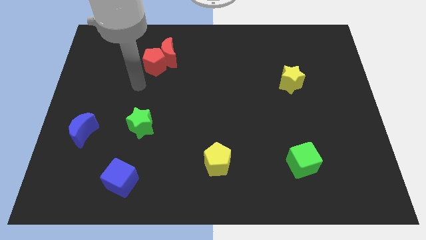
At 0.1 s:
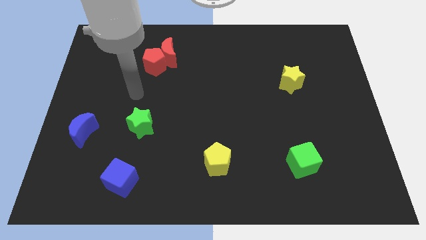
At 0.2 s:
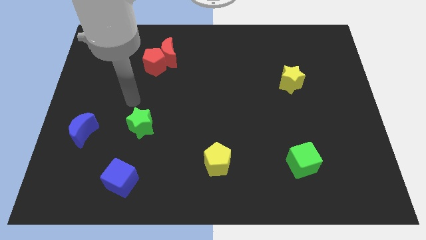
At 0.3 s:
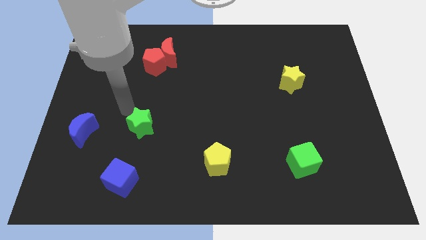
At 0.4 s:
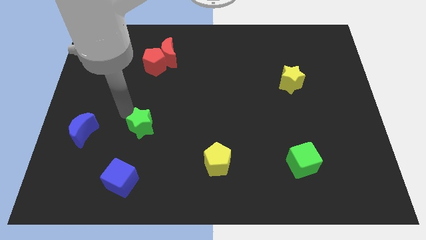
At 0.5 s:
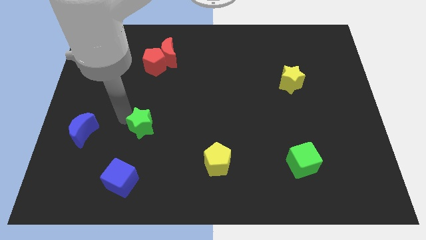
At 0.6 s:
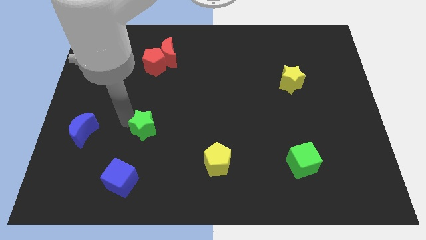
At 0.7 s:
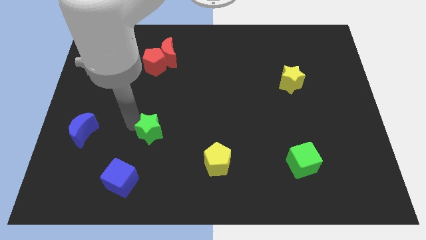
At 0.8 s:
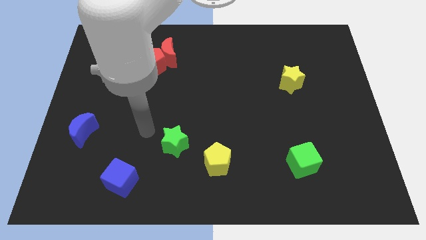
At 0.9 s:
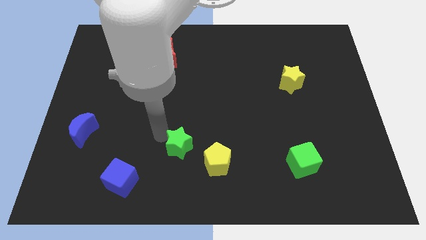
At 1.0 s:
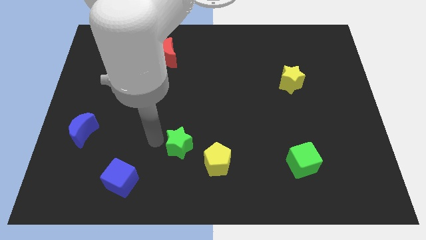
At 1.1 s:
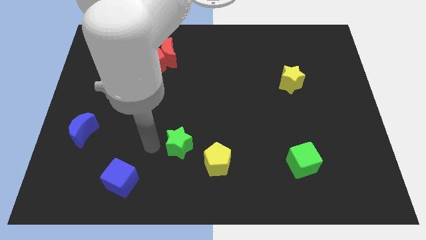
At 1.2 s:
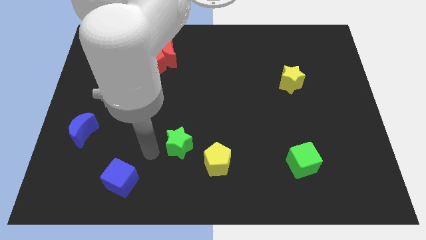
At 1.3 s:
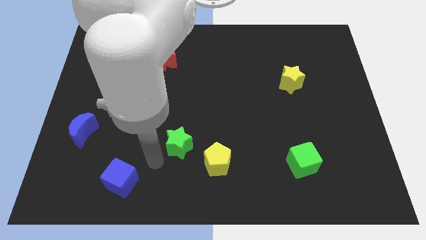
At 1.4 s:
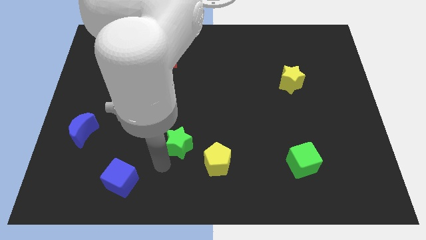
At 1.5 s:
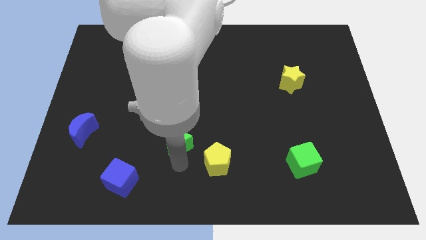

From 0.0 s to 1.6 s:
move the green star towards the yellow pentagon

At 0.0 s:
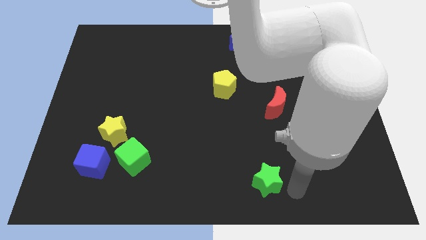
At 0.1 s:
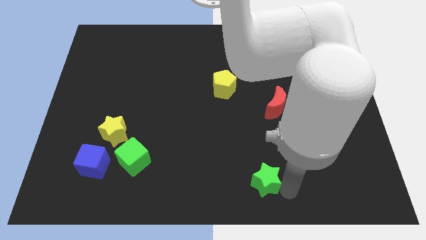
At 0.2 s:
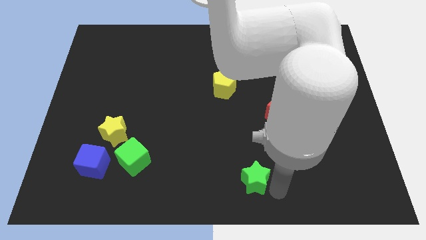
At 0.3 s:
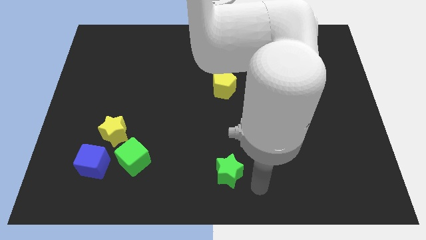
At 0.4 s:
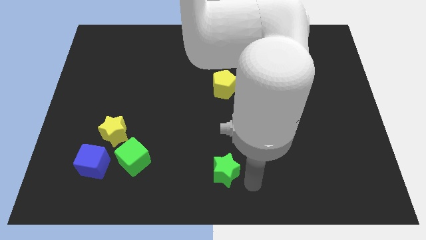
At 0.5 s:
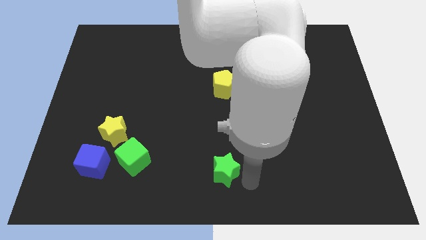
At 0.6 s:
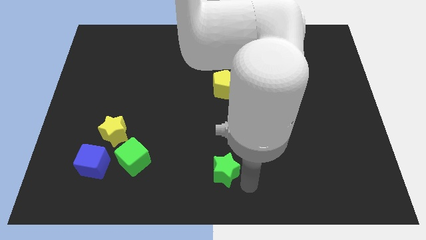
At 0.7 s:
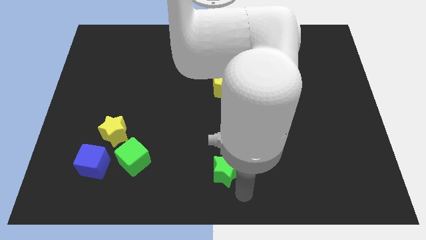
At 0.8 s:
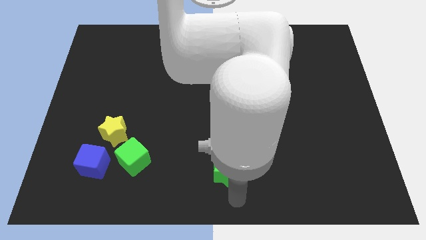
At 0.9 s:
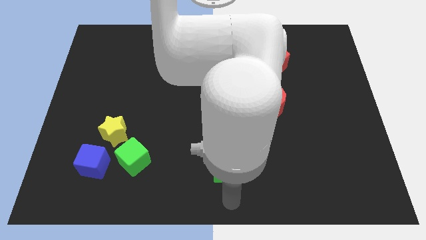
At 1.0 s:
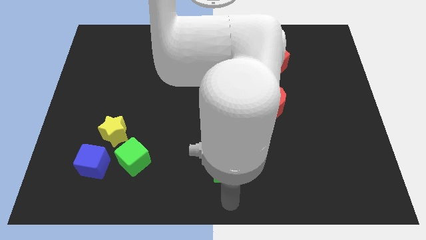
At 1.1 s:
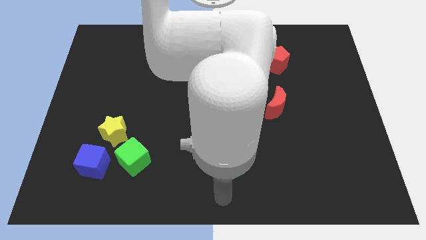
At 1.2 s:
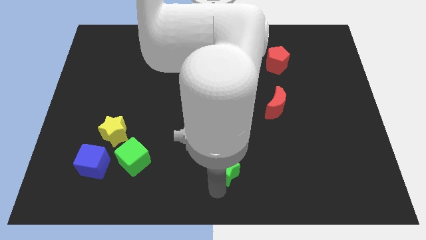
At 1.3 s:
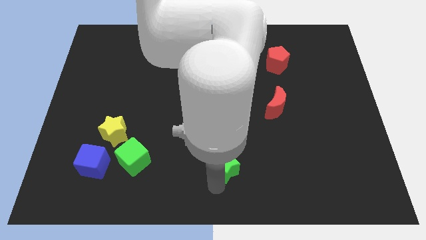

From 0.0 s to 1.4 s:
push the green star to the right of the green cube

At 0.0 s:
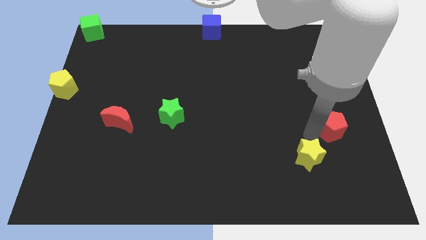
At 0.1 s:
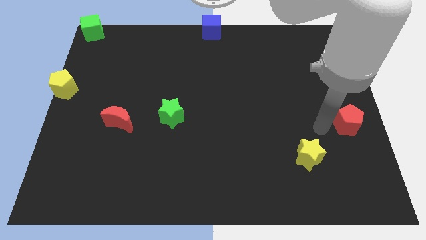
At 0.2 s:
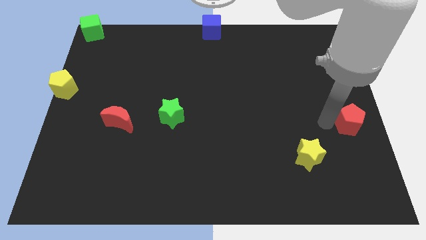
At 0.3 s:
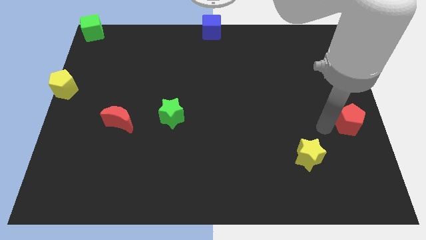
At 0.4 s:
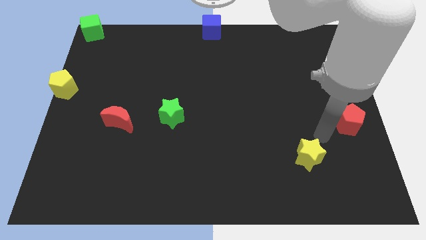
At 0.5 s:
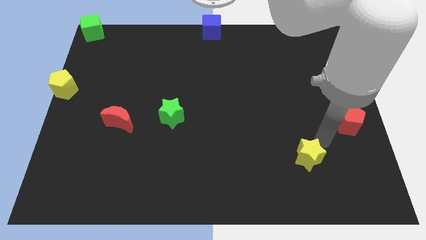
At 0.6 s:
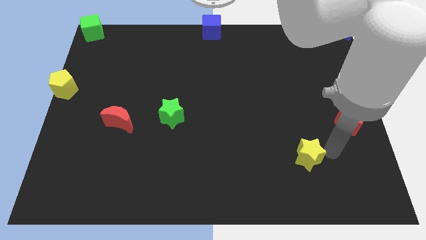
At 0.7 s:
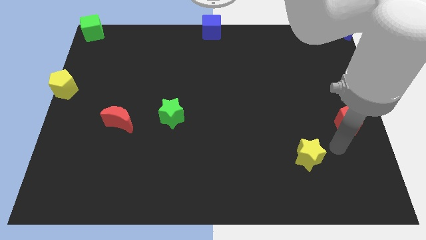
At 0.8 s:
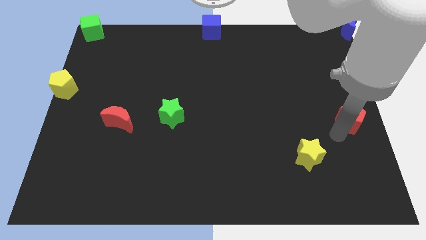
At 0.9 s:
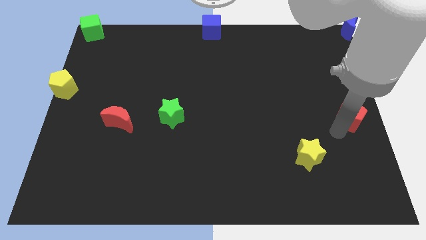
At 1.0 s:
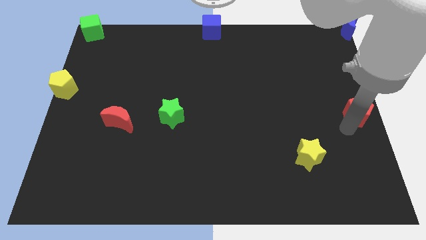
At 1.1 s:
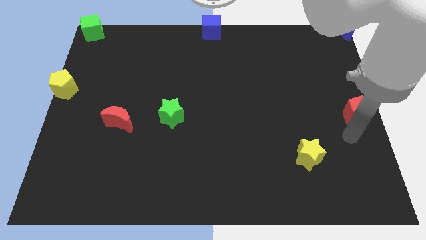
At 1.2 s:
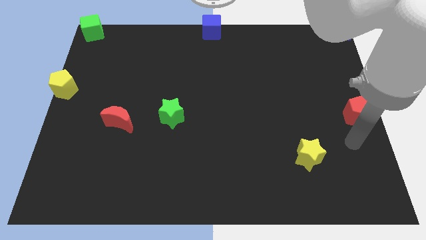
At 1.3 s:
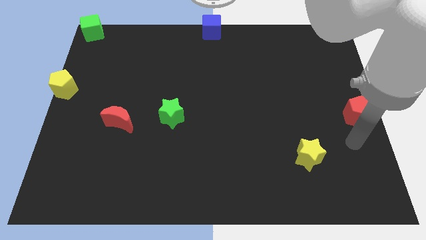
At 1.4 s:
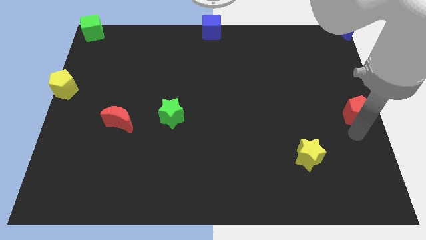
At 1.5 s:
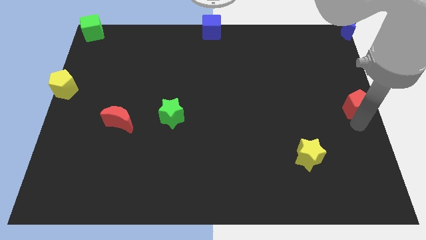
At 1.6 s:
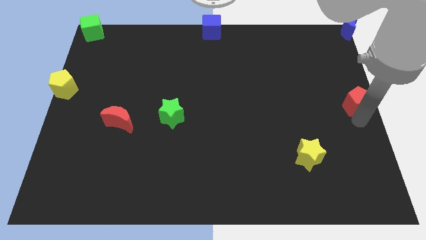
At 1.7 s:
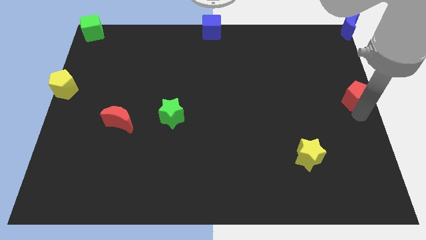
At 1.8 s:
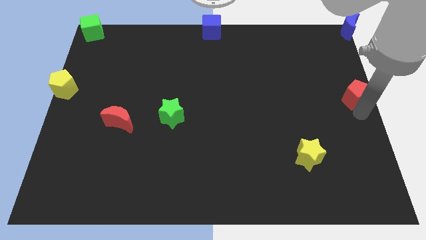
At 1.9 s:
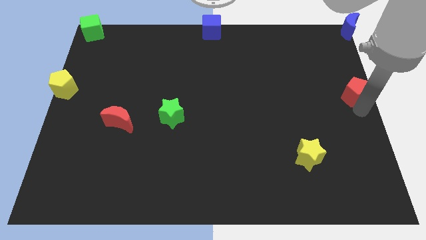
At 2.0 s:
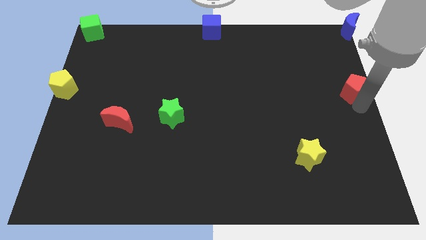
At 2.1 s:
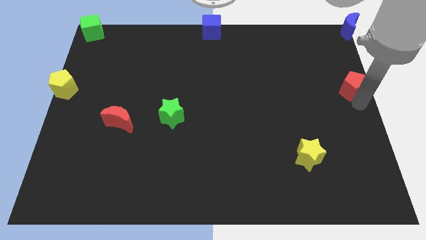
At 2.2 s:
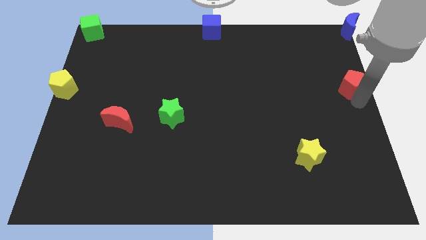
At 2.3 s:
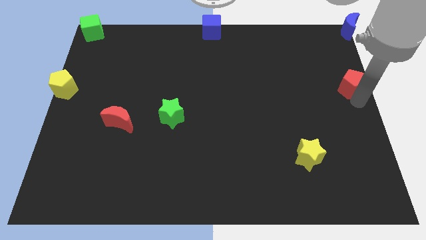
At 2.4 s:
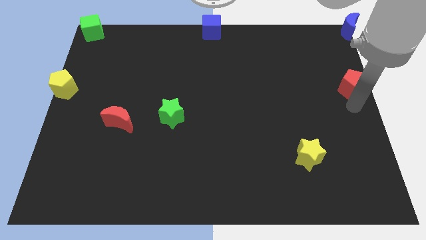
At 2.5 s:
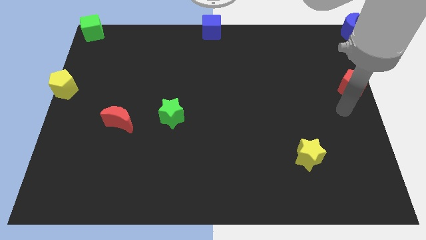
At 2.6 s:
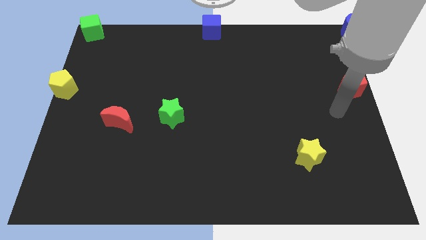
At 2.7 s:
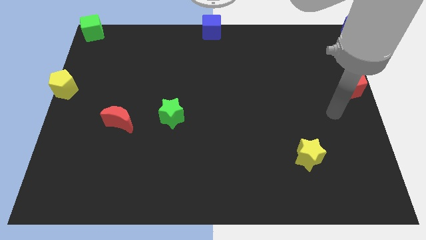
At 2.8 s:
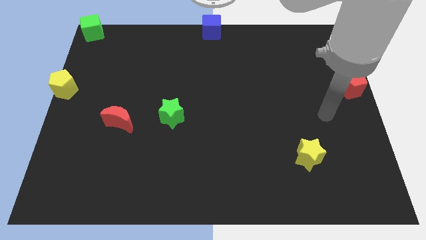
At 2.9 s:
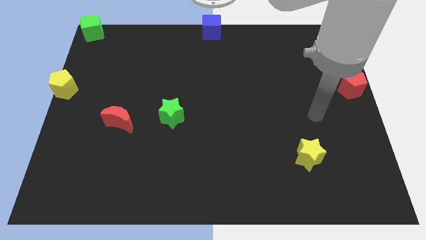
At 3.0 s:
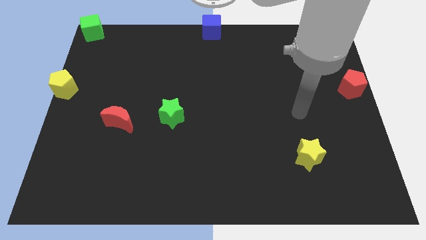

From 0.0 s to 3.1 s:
place the red pentagon on center right of the board

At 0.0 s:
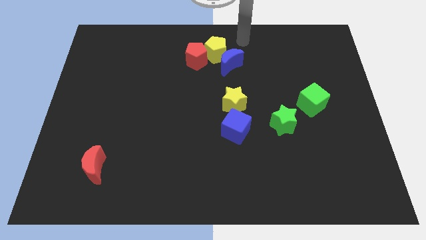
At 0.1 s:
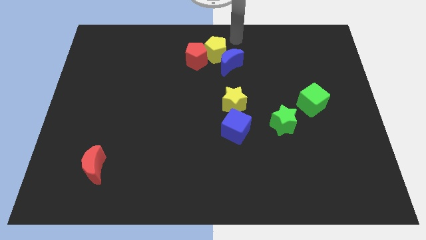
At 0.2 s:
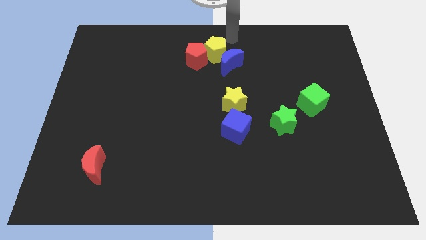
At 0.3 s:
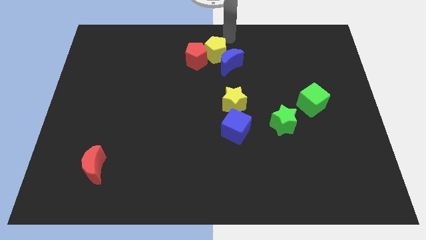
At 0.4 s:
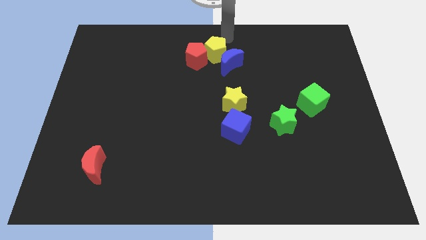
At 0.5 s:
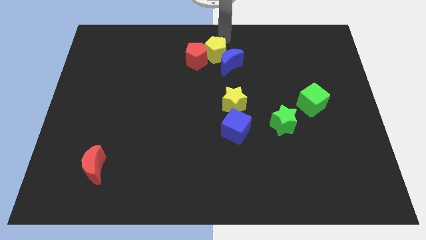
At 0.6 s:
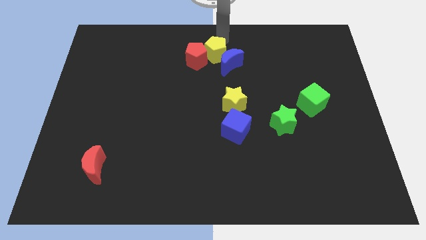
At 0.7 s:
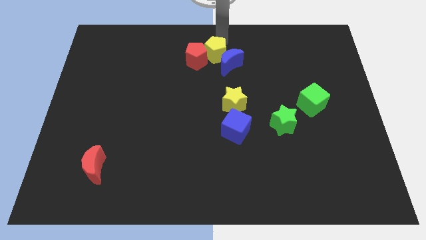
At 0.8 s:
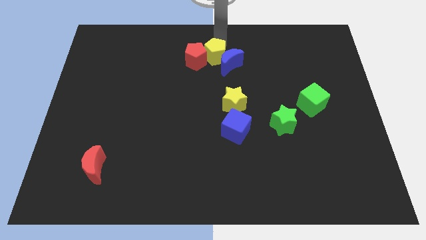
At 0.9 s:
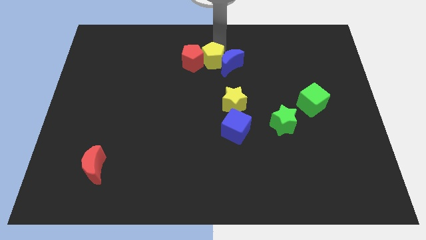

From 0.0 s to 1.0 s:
push the yellow pentagon slightly towards downward

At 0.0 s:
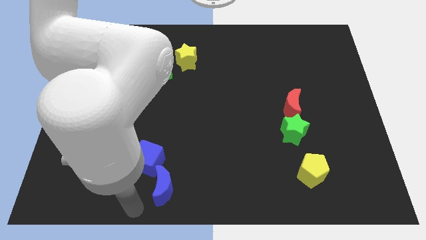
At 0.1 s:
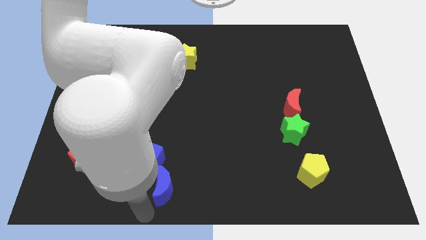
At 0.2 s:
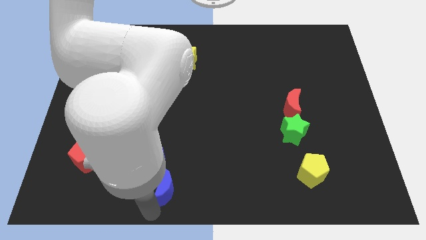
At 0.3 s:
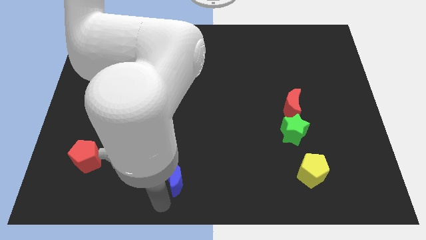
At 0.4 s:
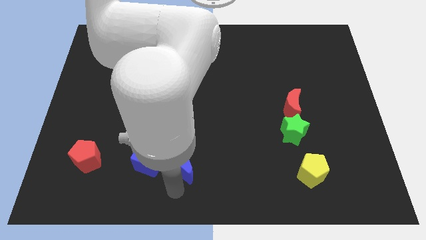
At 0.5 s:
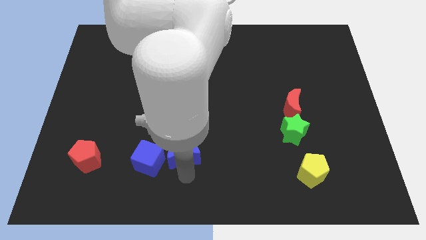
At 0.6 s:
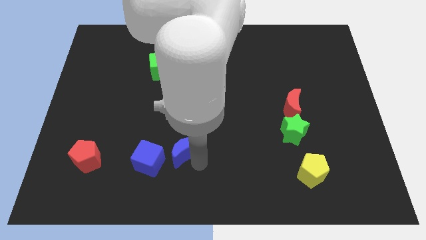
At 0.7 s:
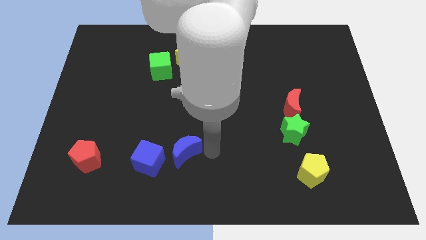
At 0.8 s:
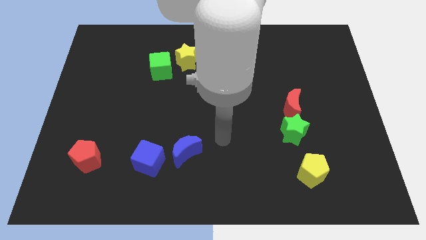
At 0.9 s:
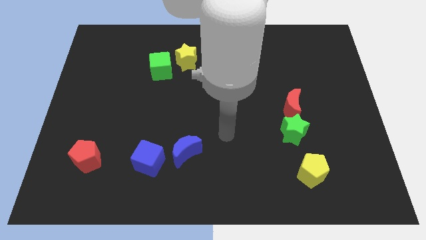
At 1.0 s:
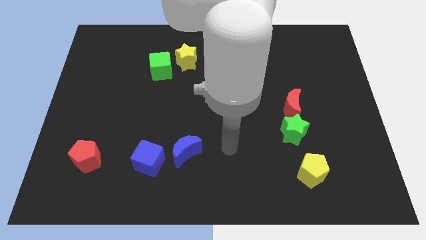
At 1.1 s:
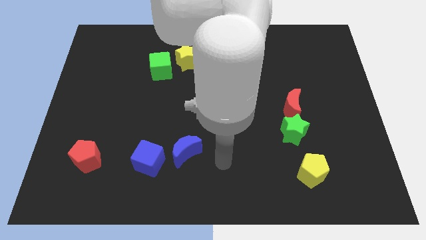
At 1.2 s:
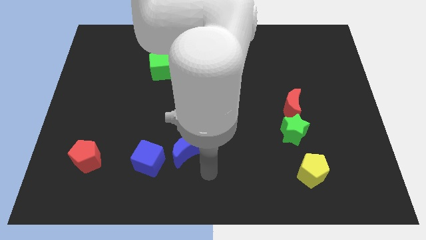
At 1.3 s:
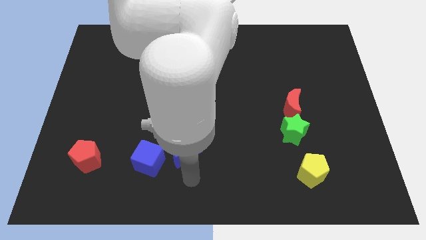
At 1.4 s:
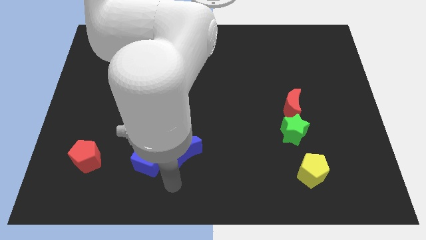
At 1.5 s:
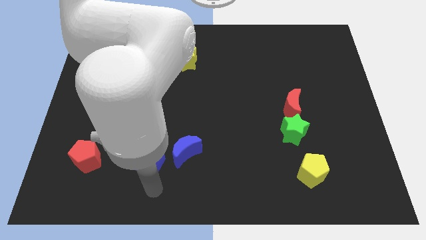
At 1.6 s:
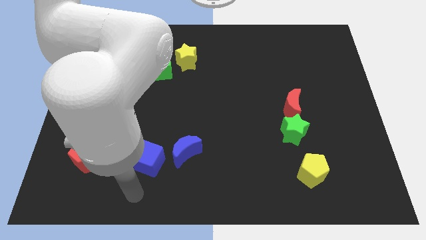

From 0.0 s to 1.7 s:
push the blue moon to the top right side of the blue cube
